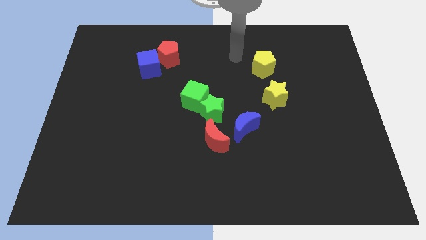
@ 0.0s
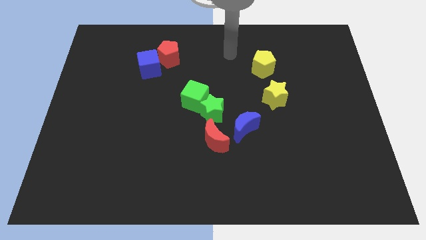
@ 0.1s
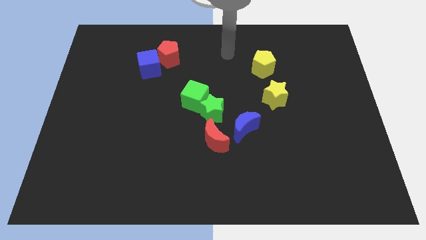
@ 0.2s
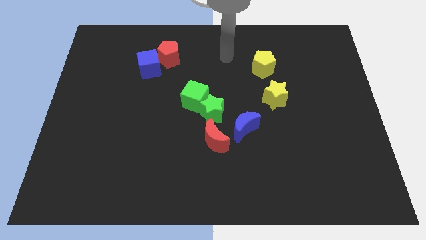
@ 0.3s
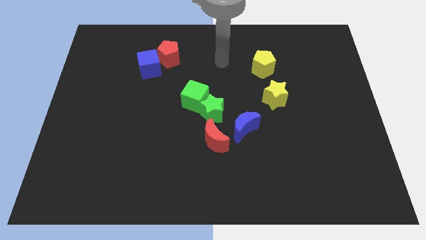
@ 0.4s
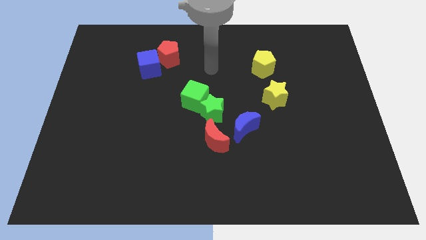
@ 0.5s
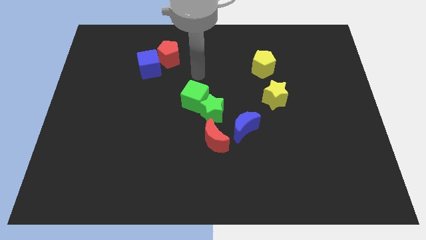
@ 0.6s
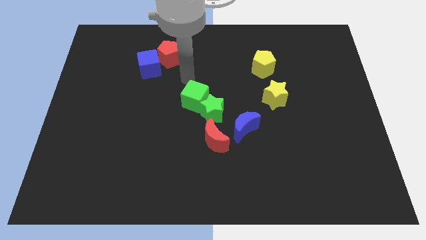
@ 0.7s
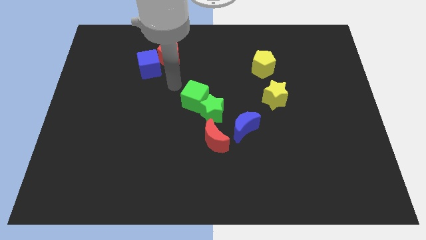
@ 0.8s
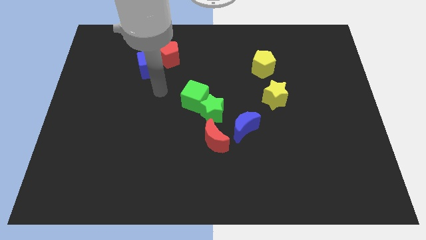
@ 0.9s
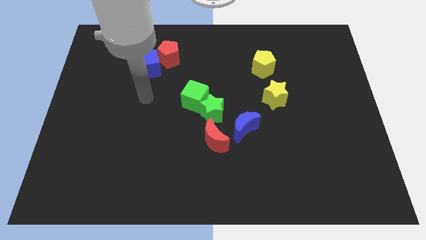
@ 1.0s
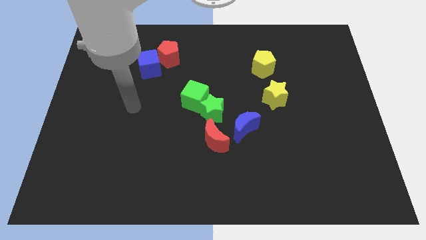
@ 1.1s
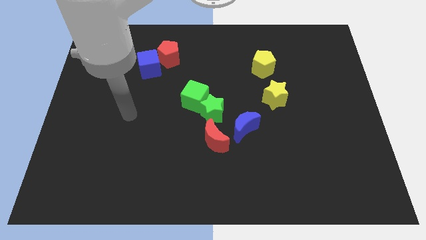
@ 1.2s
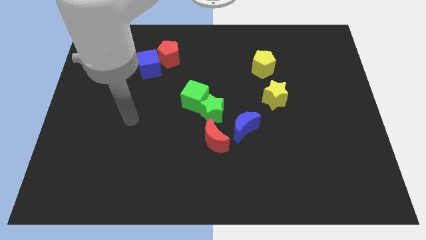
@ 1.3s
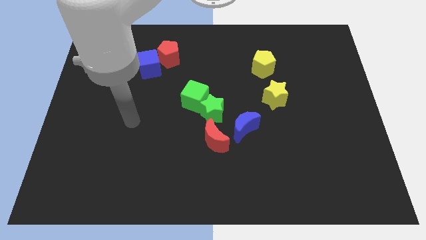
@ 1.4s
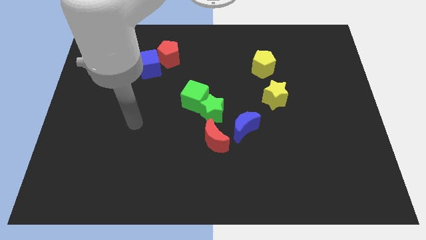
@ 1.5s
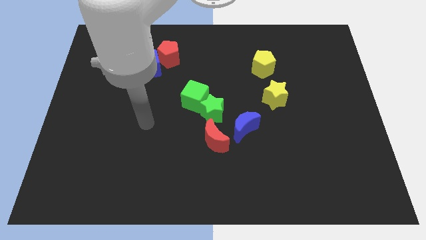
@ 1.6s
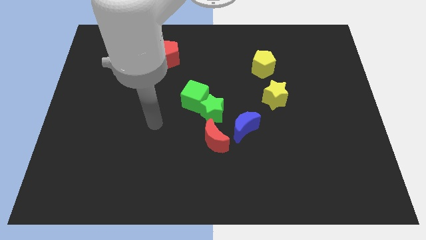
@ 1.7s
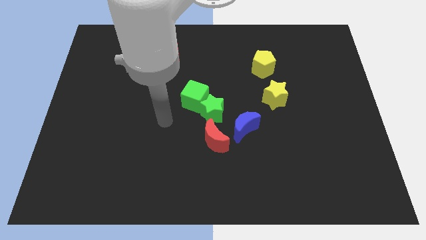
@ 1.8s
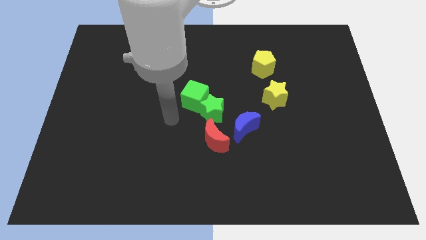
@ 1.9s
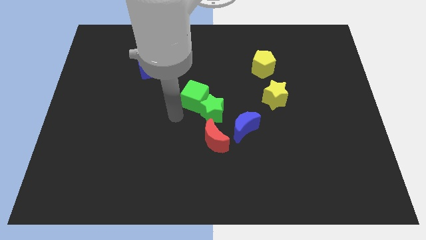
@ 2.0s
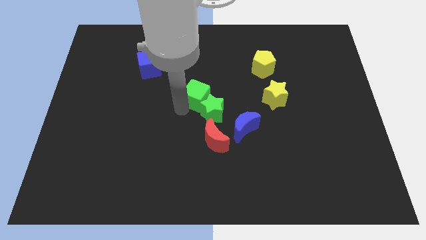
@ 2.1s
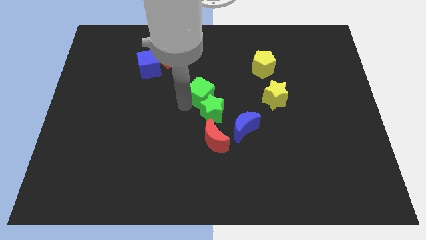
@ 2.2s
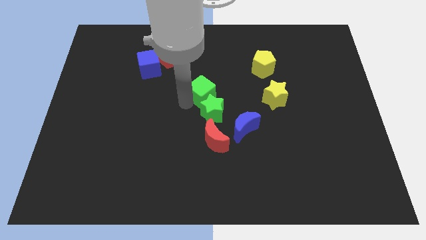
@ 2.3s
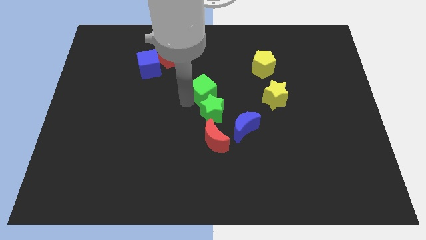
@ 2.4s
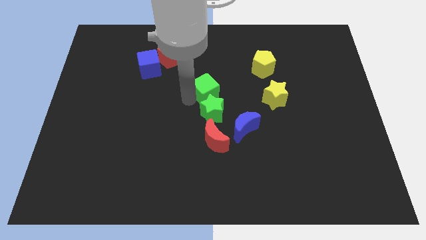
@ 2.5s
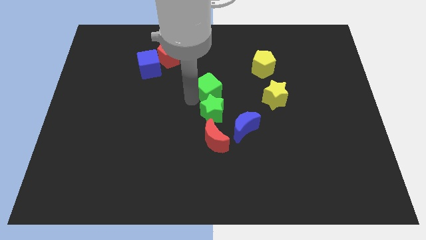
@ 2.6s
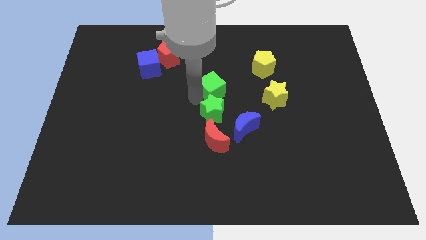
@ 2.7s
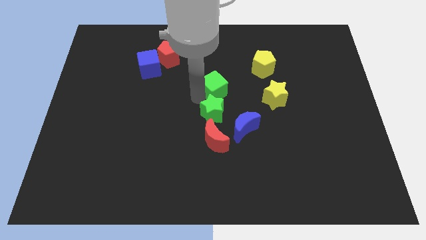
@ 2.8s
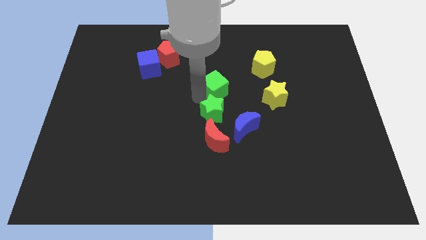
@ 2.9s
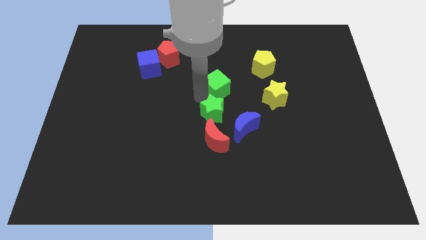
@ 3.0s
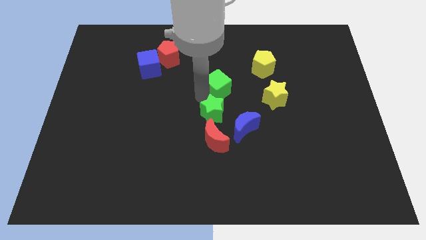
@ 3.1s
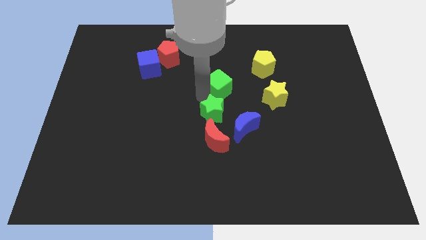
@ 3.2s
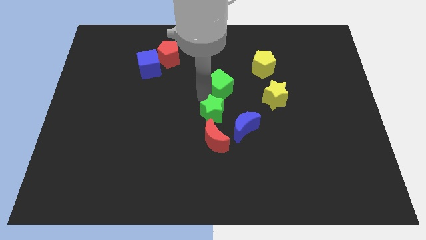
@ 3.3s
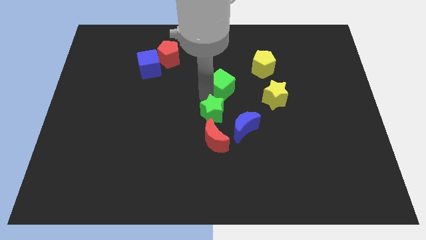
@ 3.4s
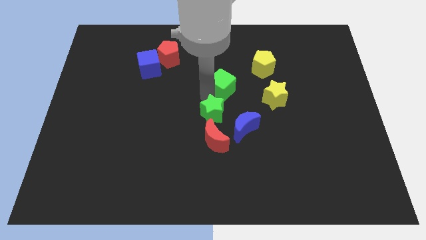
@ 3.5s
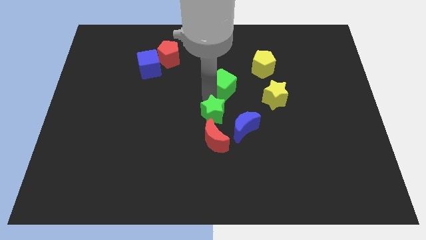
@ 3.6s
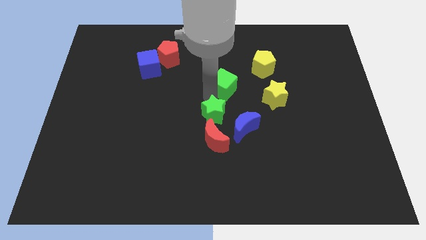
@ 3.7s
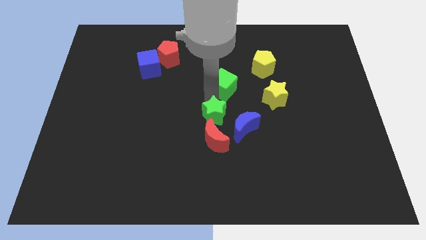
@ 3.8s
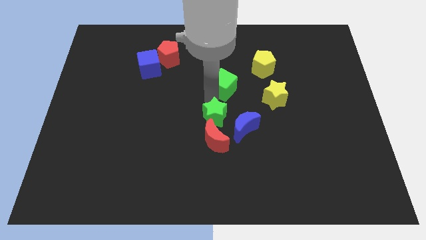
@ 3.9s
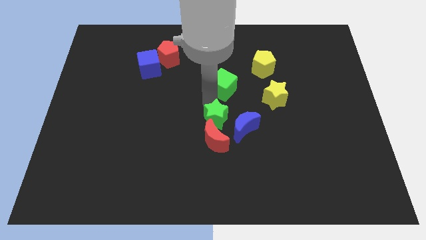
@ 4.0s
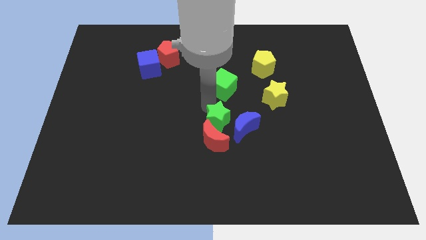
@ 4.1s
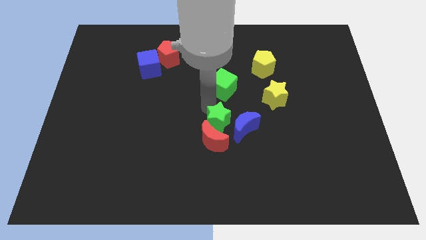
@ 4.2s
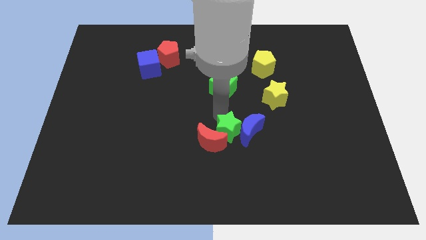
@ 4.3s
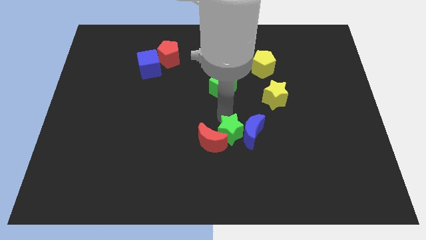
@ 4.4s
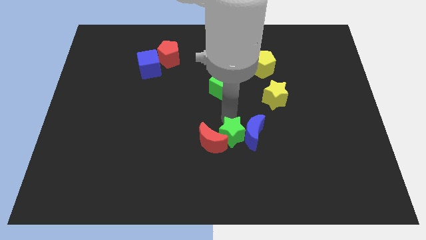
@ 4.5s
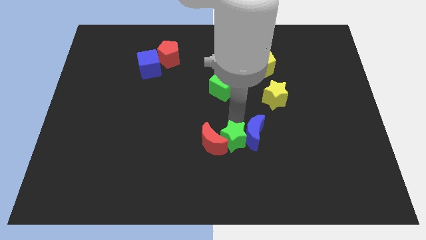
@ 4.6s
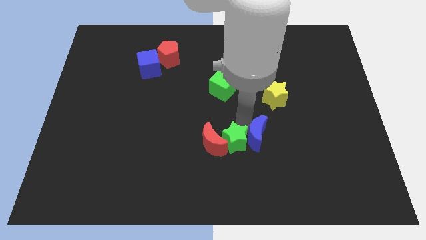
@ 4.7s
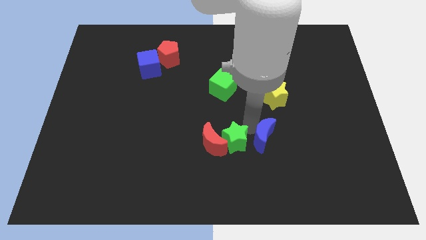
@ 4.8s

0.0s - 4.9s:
separate green star from the green cube

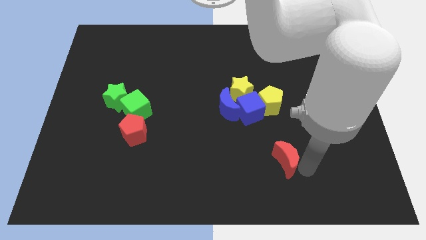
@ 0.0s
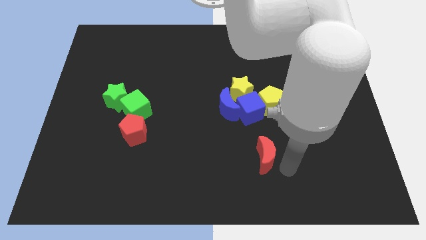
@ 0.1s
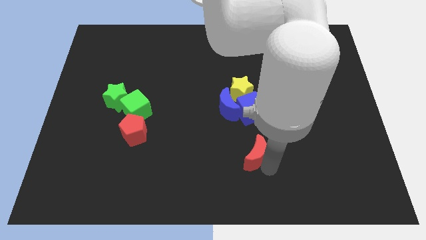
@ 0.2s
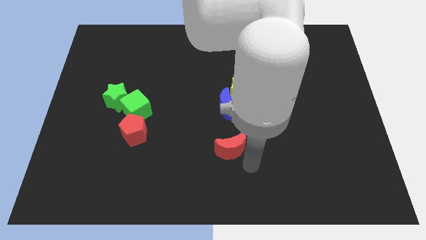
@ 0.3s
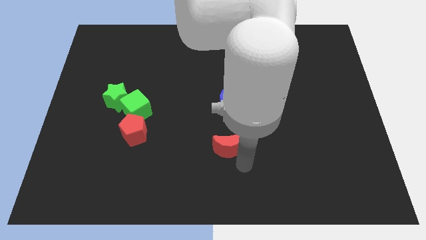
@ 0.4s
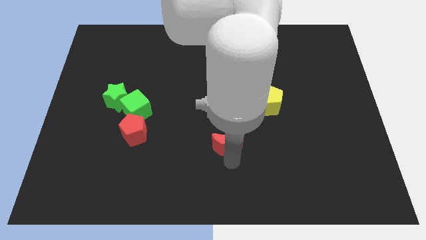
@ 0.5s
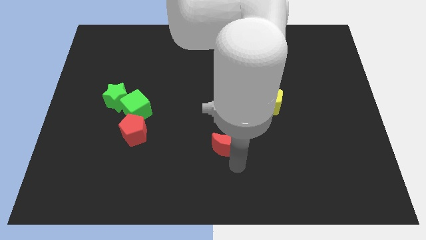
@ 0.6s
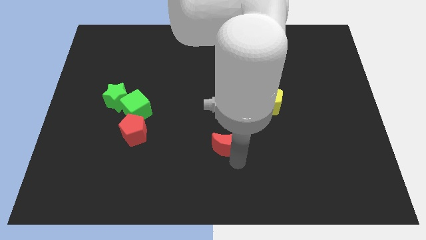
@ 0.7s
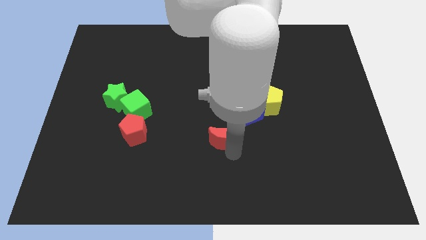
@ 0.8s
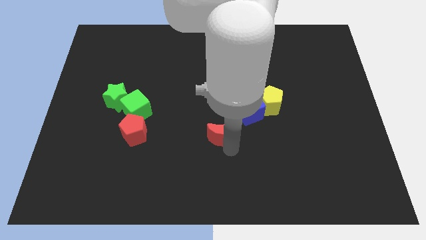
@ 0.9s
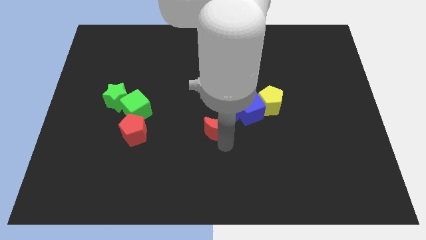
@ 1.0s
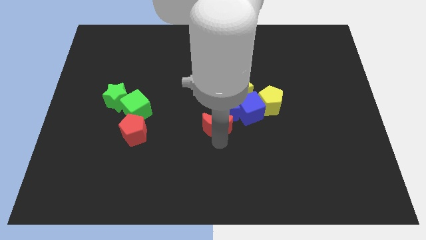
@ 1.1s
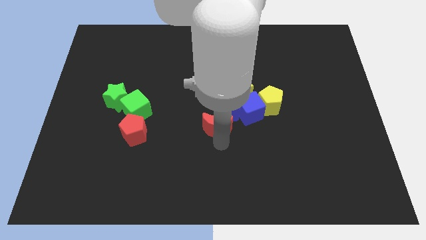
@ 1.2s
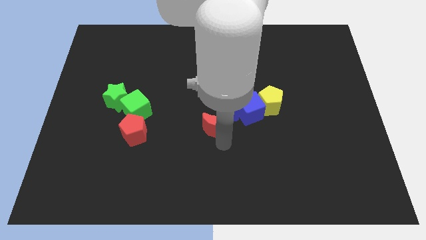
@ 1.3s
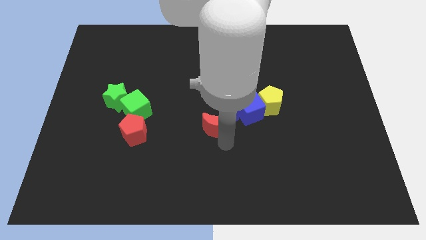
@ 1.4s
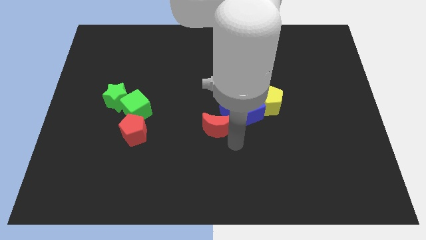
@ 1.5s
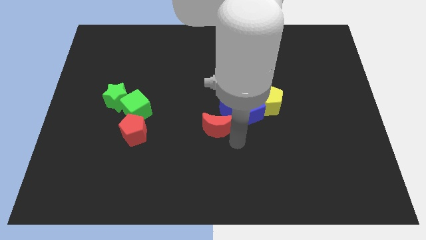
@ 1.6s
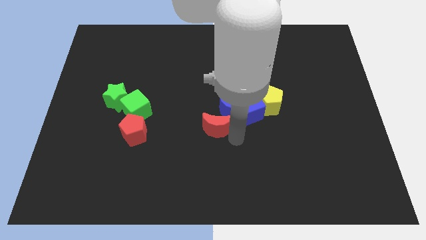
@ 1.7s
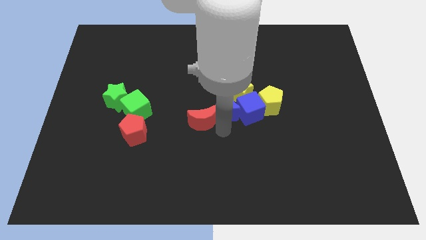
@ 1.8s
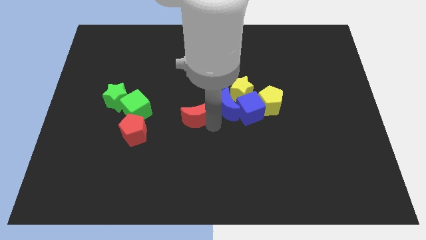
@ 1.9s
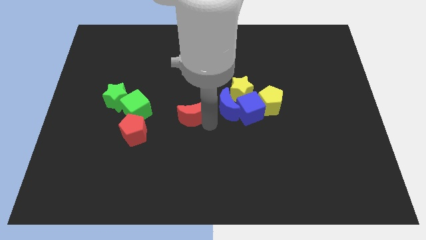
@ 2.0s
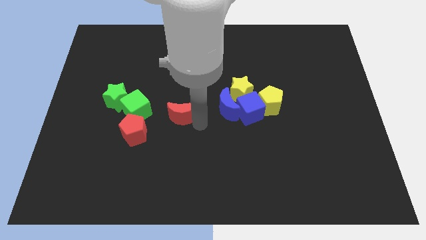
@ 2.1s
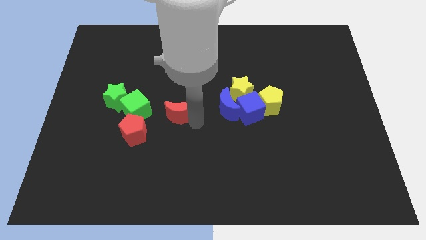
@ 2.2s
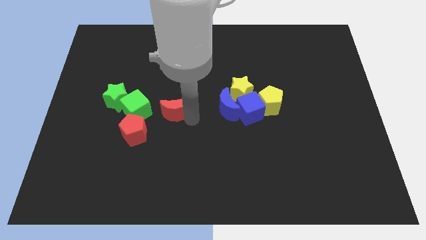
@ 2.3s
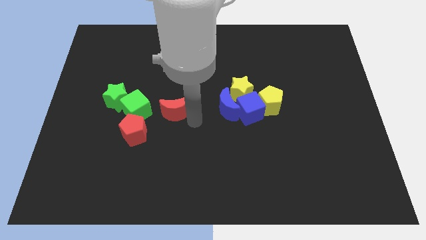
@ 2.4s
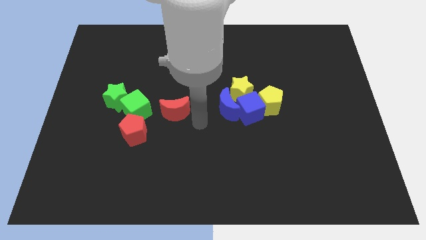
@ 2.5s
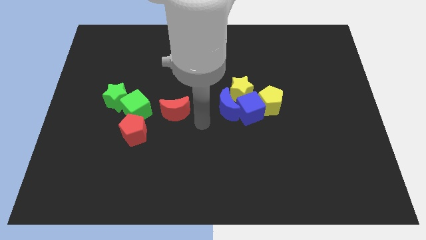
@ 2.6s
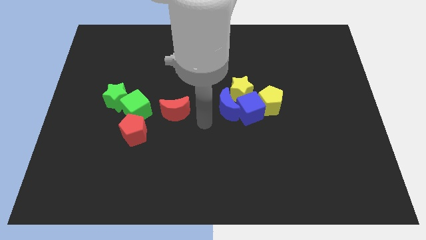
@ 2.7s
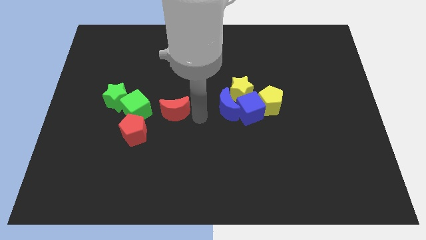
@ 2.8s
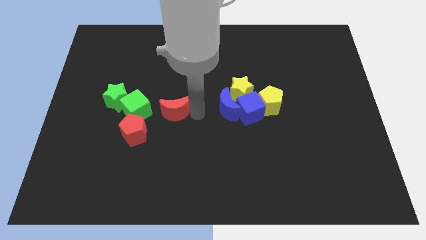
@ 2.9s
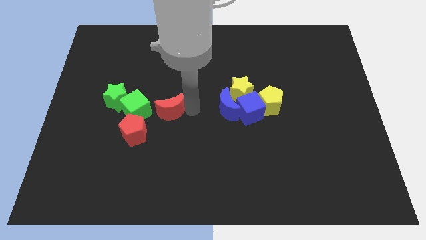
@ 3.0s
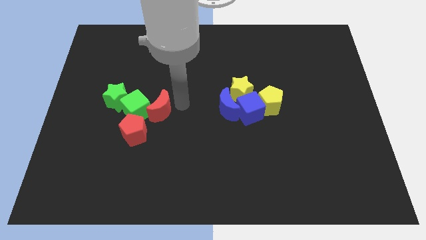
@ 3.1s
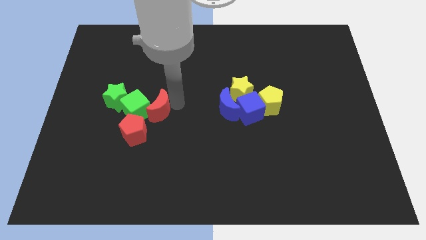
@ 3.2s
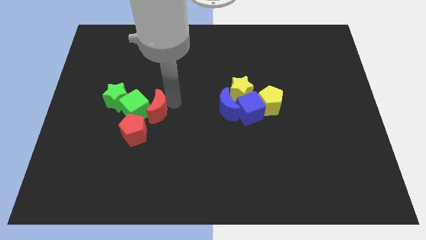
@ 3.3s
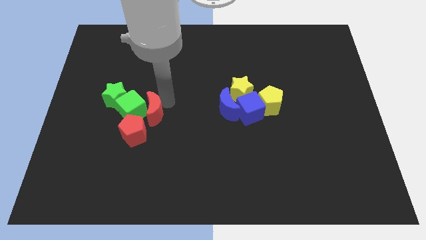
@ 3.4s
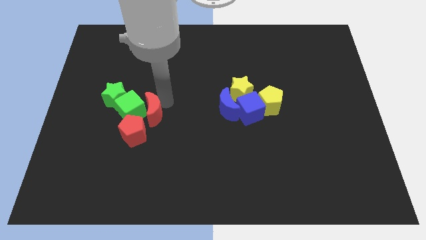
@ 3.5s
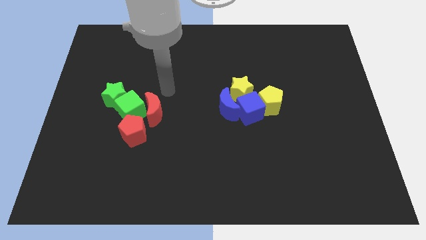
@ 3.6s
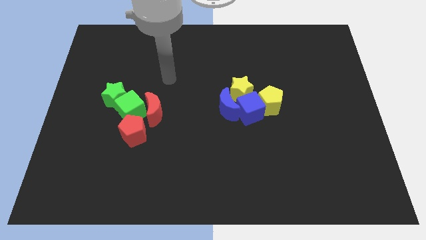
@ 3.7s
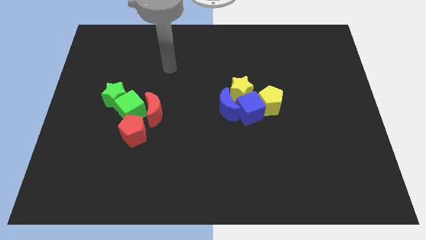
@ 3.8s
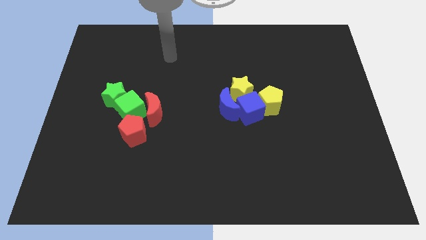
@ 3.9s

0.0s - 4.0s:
move the red crescent to the right side of the green cube
